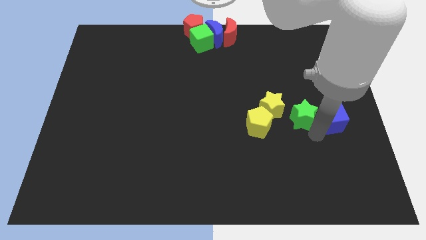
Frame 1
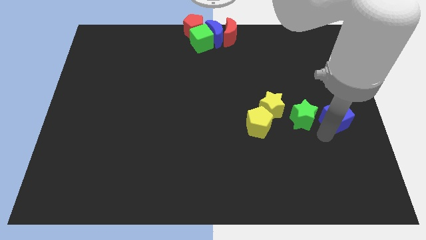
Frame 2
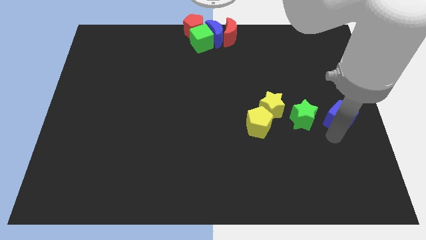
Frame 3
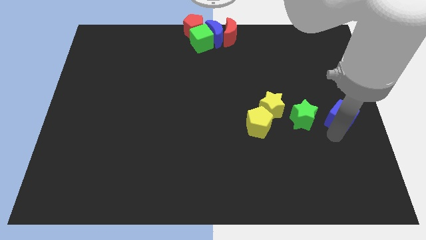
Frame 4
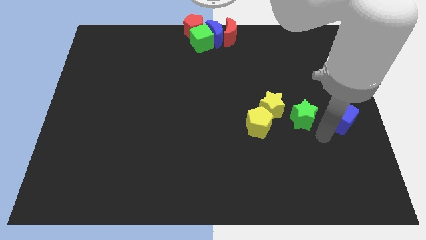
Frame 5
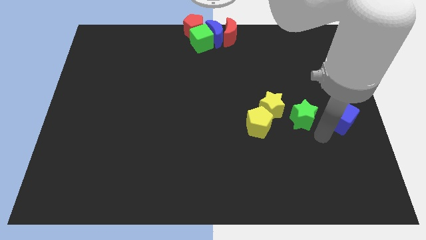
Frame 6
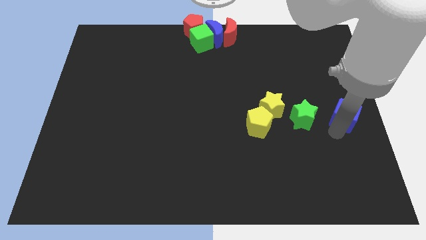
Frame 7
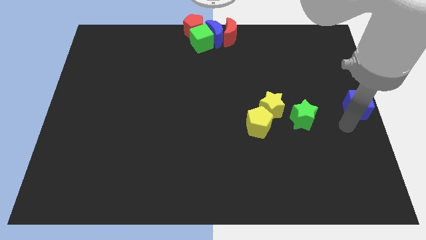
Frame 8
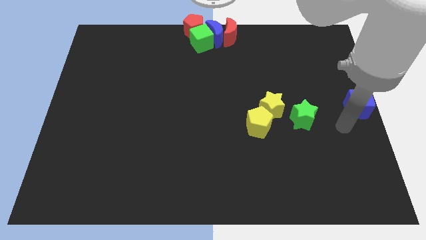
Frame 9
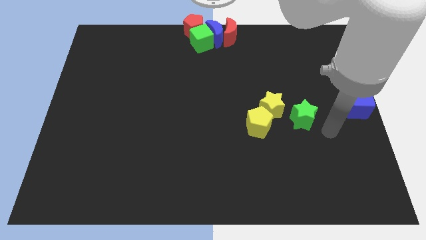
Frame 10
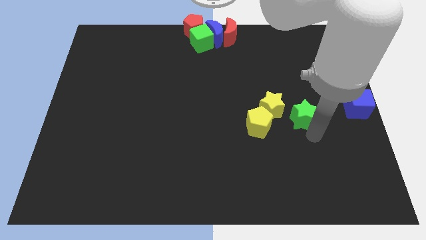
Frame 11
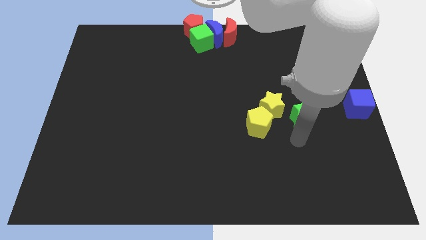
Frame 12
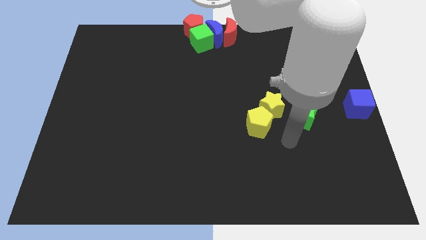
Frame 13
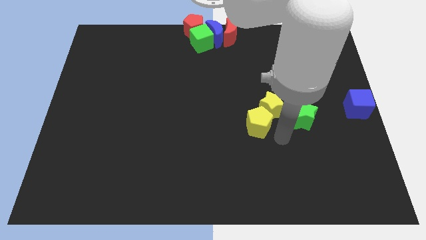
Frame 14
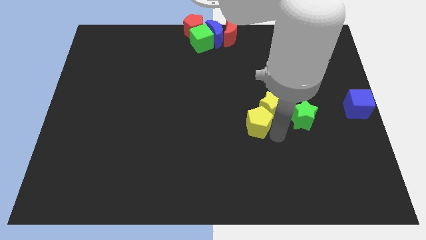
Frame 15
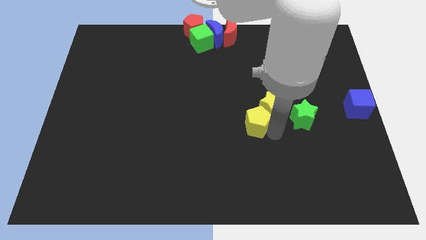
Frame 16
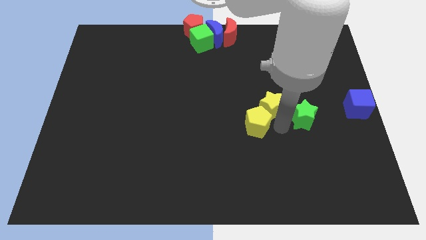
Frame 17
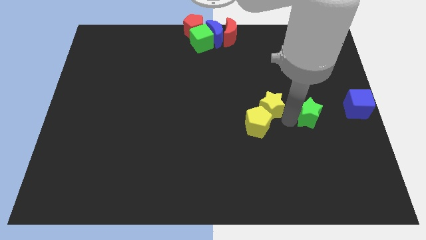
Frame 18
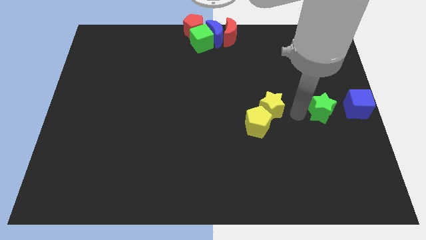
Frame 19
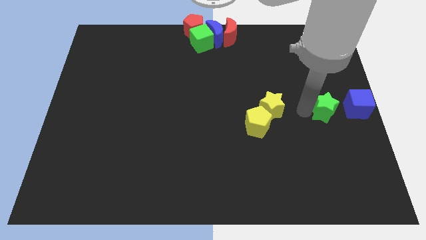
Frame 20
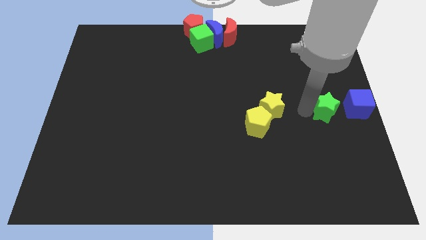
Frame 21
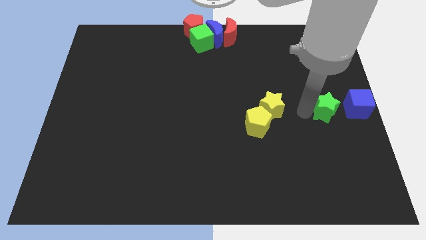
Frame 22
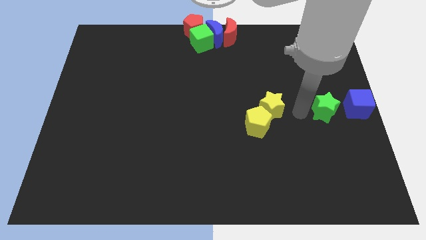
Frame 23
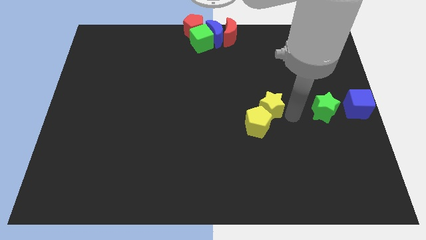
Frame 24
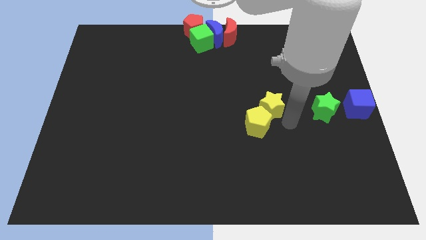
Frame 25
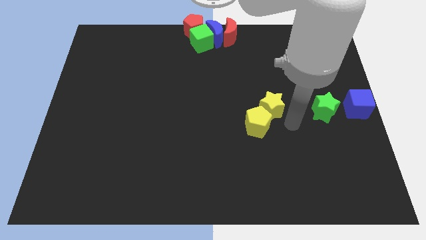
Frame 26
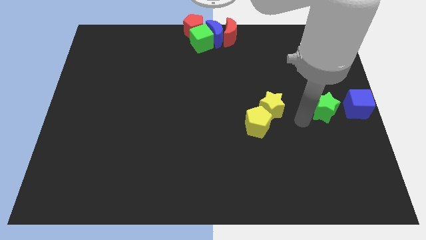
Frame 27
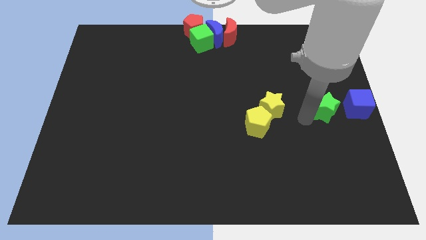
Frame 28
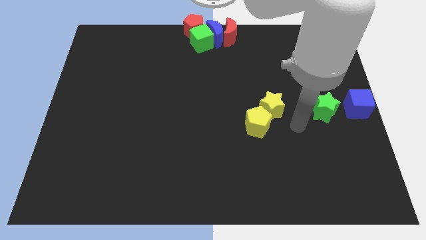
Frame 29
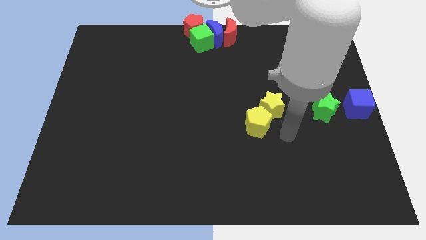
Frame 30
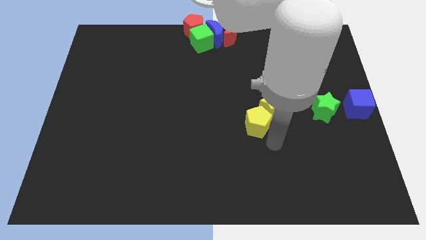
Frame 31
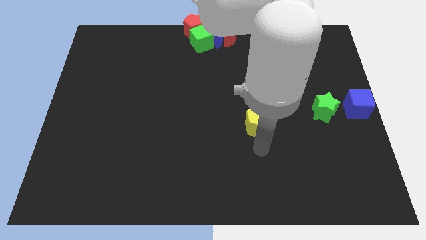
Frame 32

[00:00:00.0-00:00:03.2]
place the green star left to the blue cube

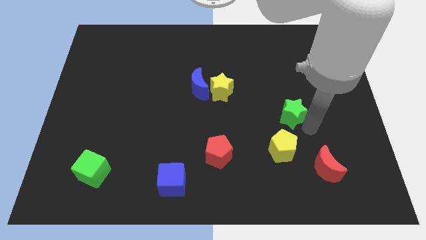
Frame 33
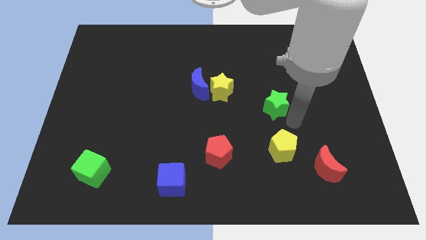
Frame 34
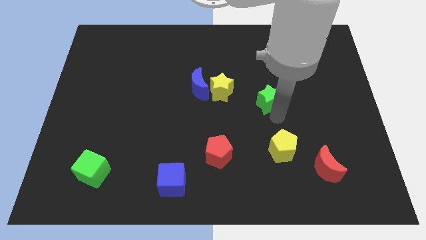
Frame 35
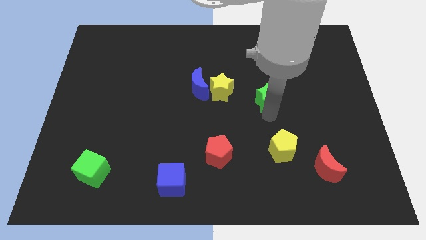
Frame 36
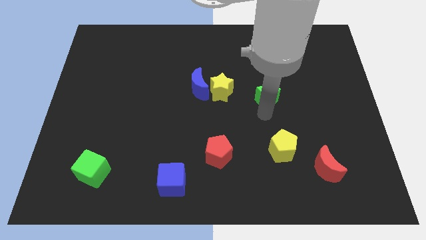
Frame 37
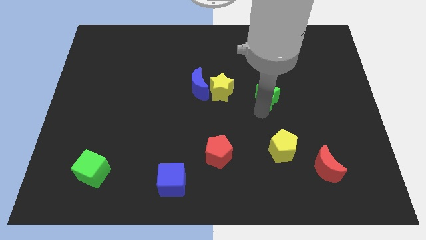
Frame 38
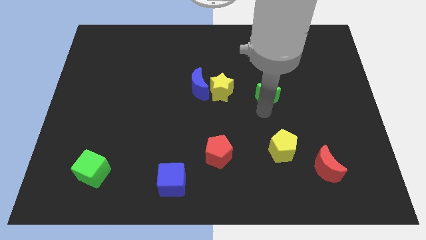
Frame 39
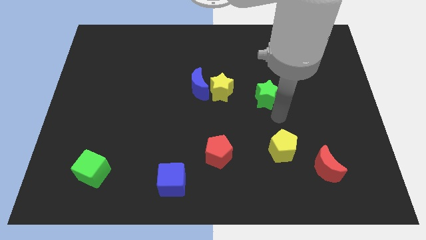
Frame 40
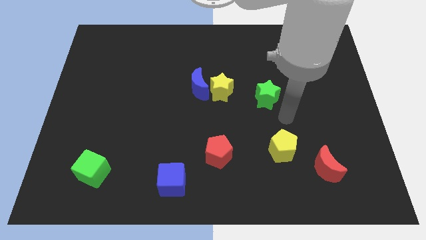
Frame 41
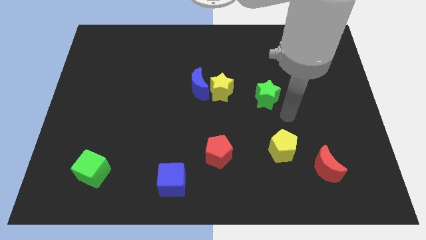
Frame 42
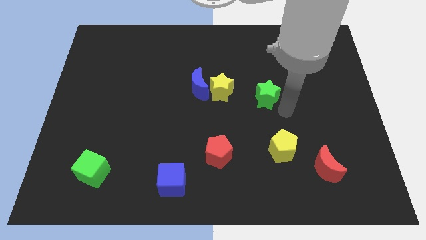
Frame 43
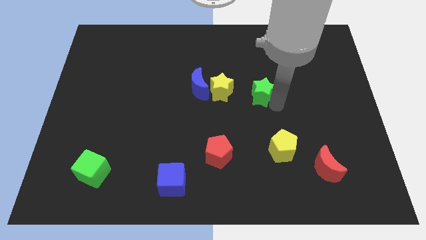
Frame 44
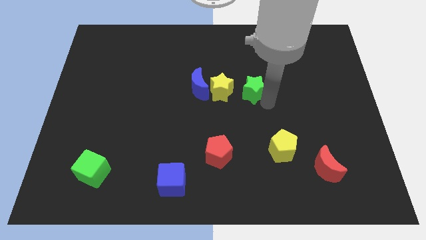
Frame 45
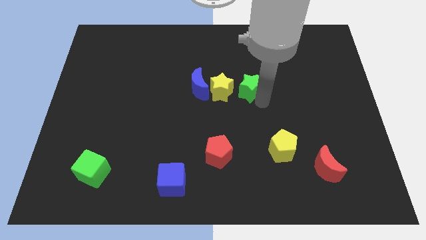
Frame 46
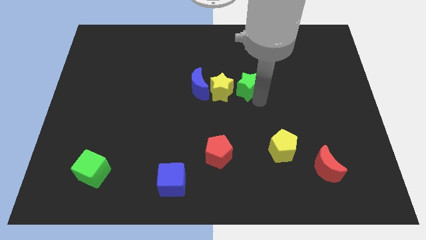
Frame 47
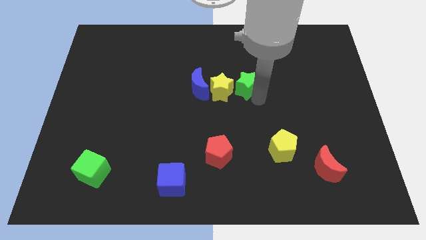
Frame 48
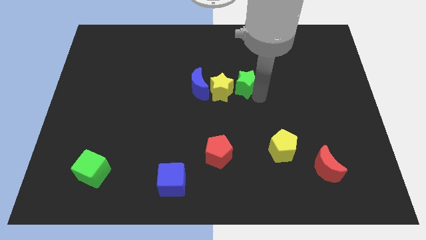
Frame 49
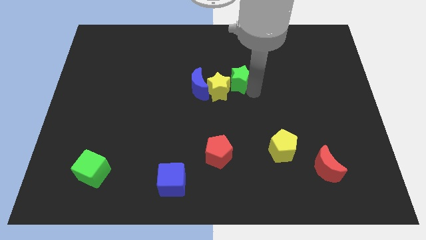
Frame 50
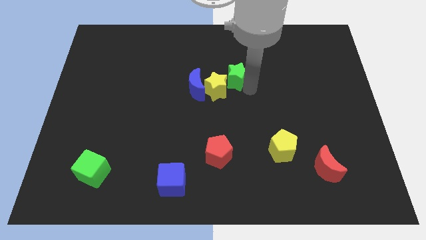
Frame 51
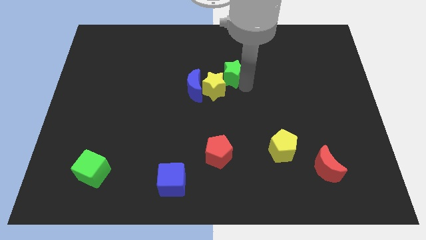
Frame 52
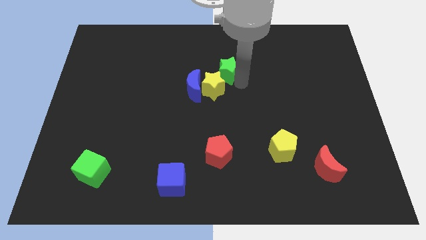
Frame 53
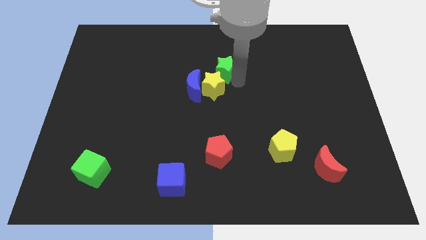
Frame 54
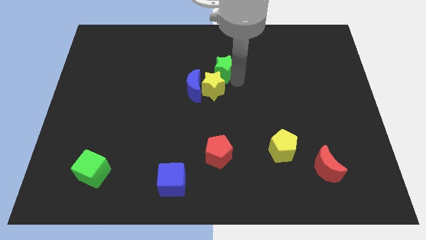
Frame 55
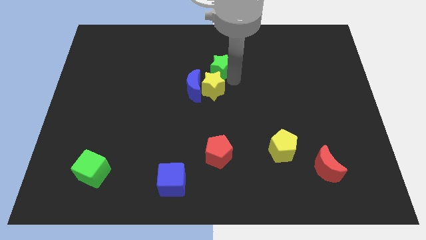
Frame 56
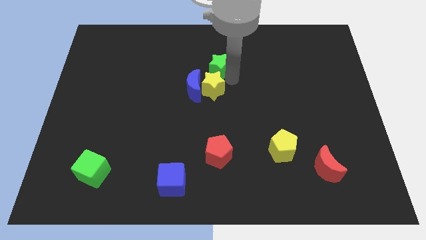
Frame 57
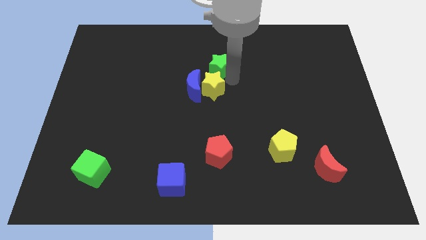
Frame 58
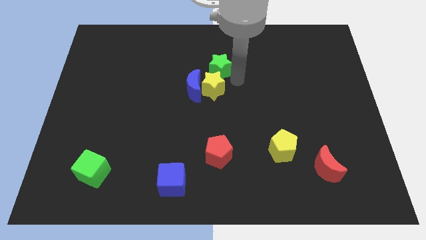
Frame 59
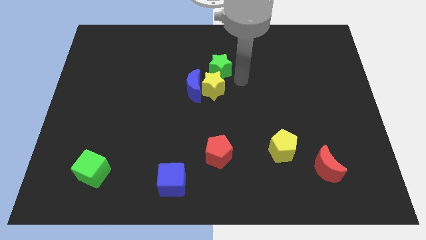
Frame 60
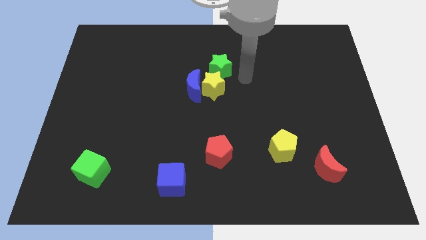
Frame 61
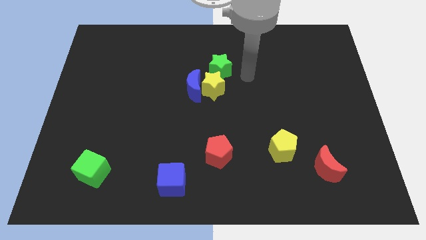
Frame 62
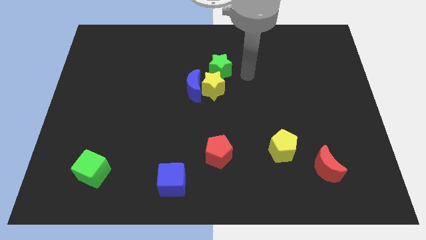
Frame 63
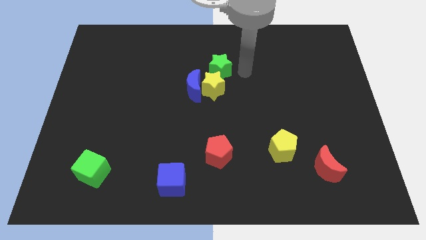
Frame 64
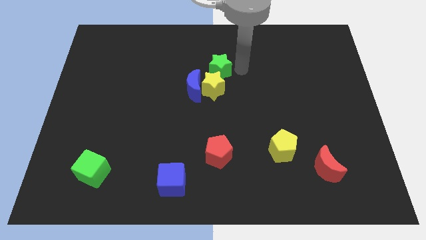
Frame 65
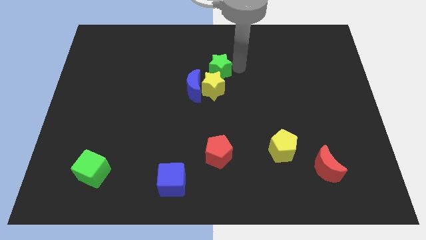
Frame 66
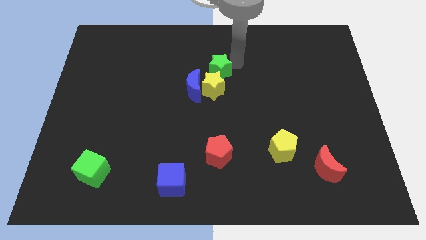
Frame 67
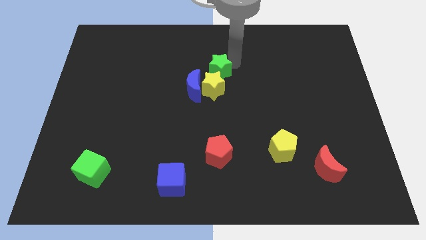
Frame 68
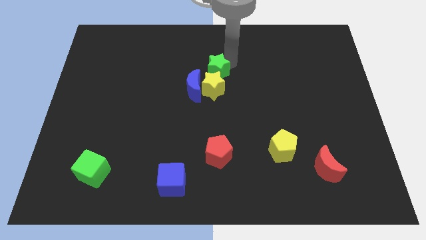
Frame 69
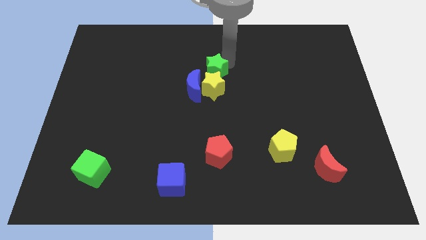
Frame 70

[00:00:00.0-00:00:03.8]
place a green star on top of the yellow star

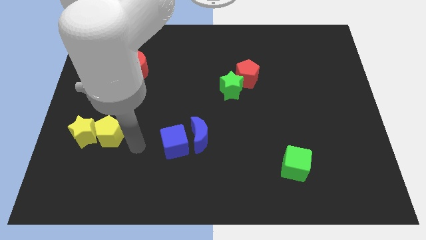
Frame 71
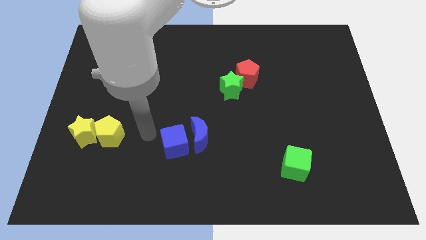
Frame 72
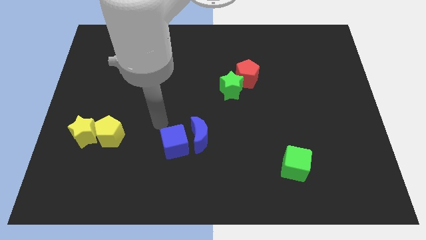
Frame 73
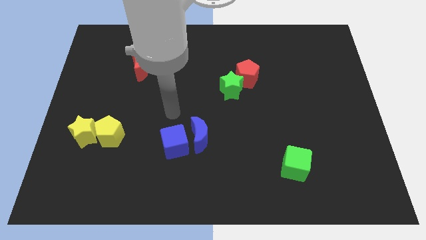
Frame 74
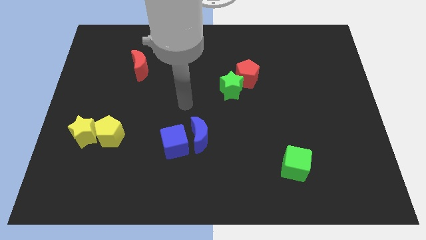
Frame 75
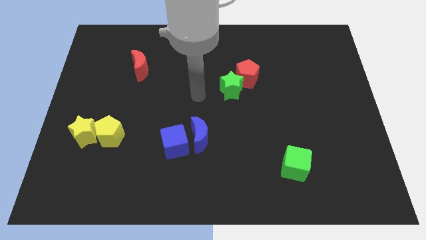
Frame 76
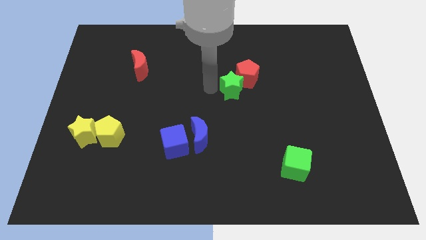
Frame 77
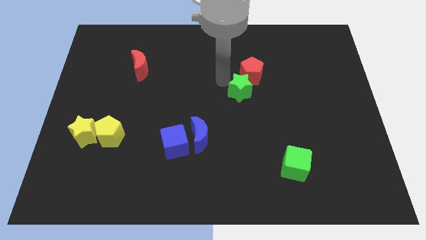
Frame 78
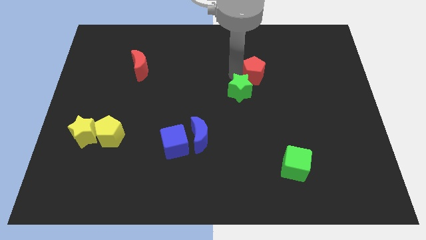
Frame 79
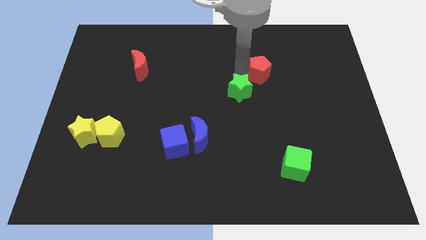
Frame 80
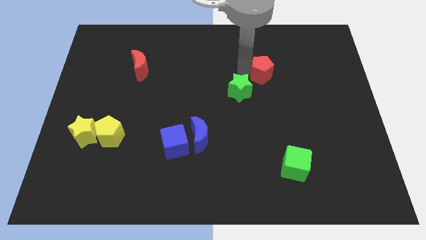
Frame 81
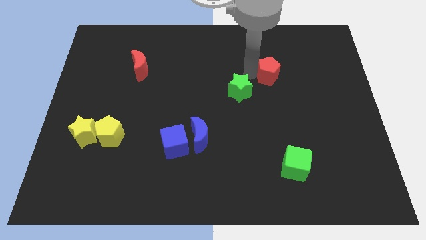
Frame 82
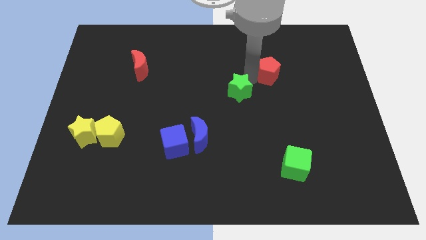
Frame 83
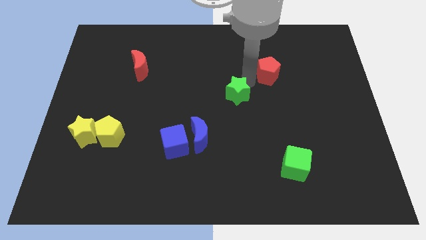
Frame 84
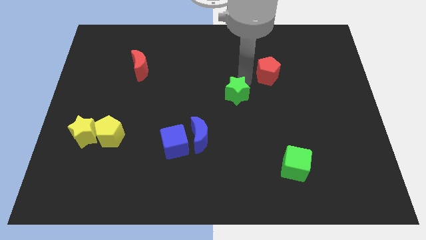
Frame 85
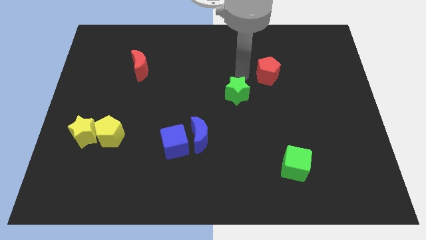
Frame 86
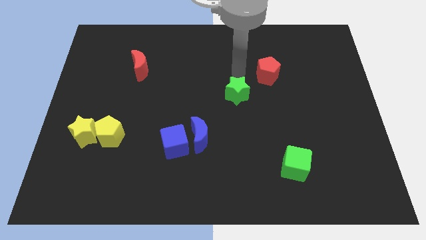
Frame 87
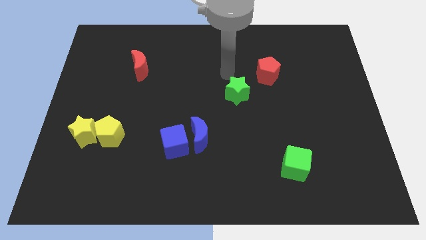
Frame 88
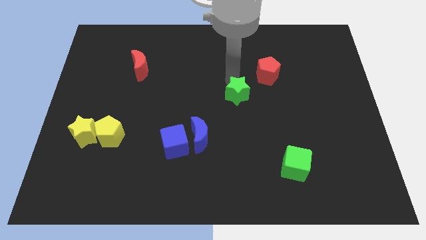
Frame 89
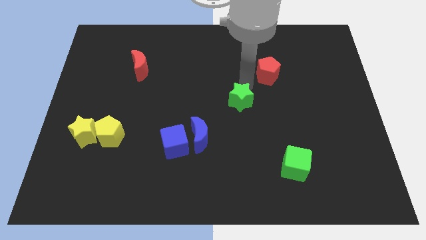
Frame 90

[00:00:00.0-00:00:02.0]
separate the green star and red pentagon
